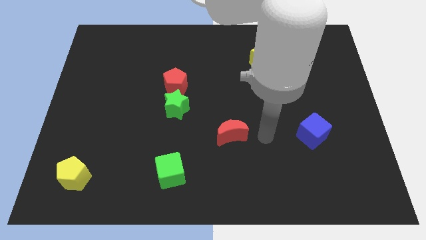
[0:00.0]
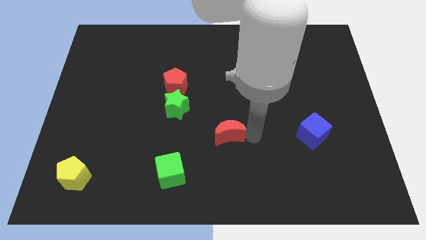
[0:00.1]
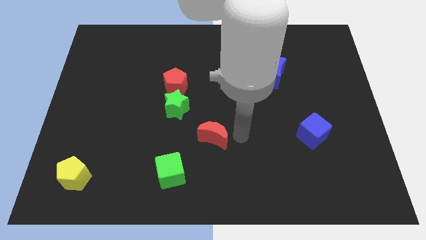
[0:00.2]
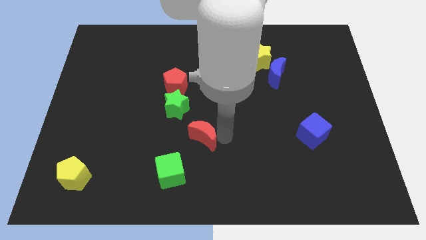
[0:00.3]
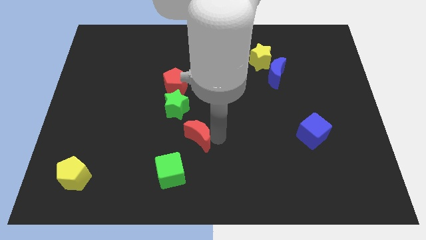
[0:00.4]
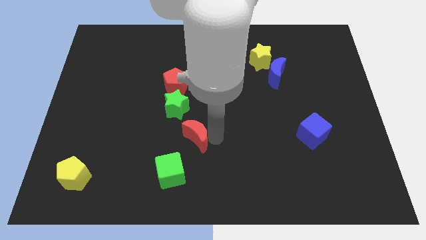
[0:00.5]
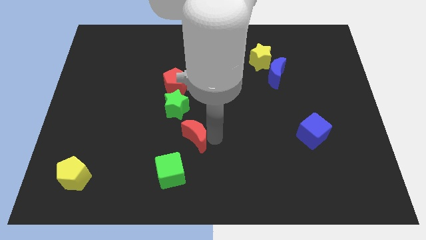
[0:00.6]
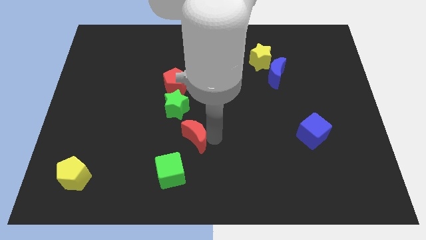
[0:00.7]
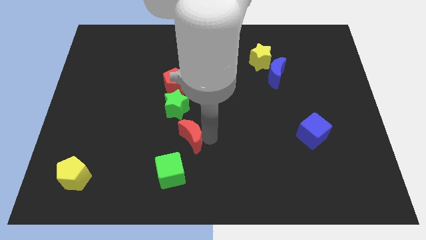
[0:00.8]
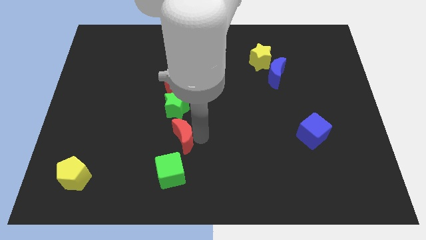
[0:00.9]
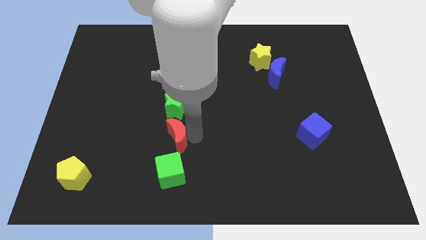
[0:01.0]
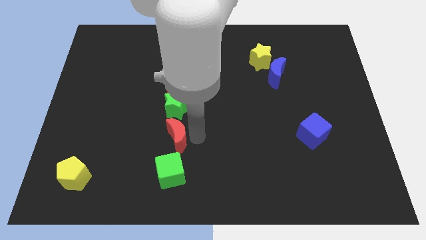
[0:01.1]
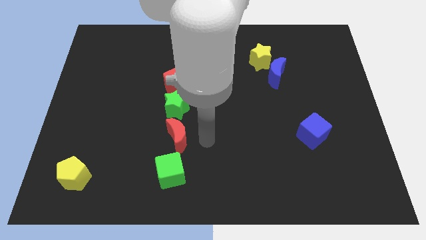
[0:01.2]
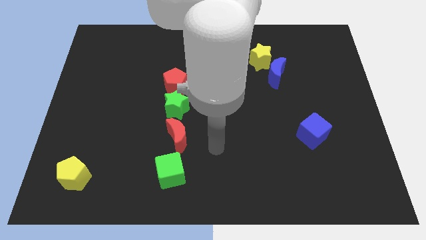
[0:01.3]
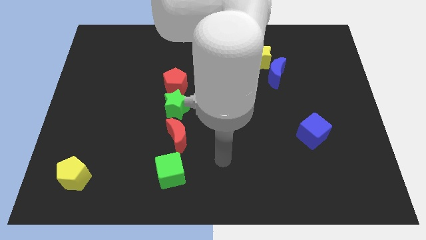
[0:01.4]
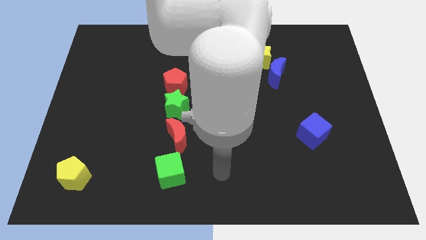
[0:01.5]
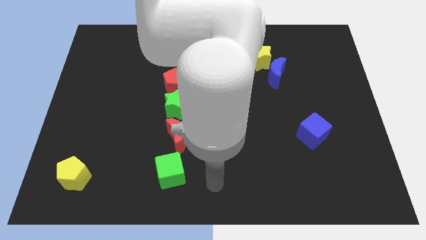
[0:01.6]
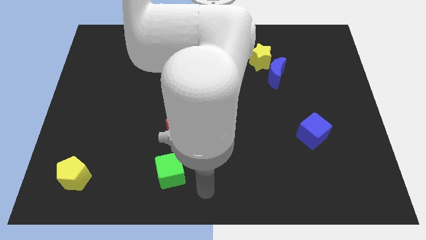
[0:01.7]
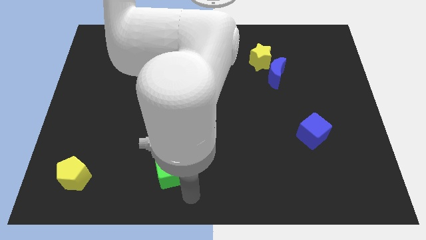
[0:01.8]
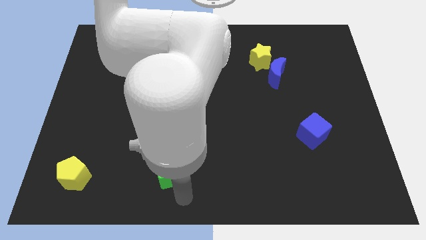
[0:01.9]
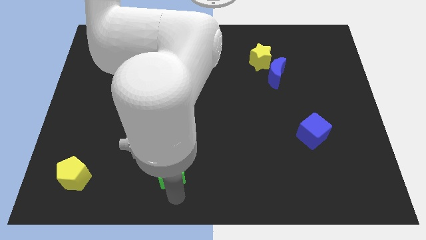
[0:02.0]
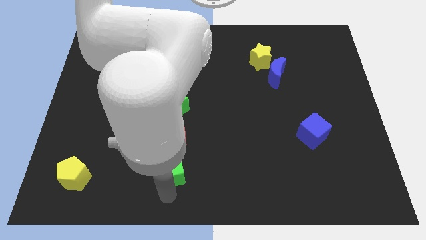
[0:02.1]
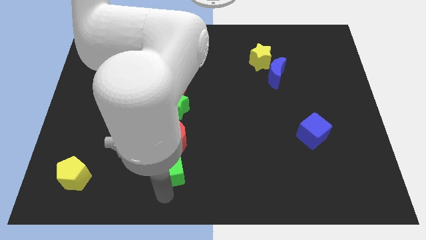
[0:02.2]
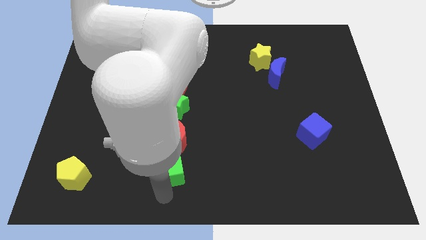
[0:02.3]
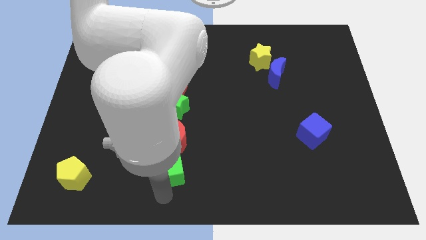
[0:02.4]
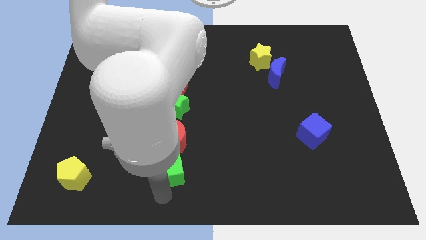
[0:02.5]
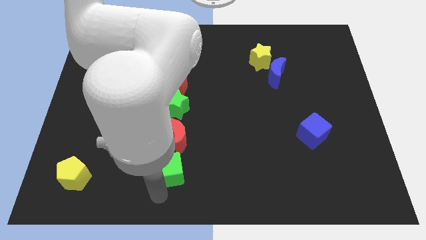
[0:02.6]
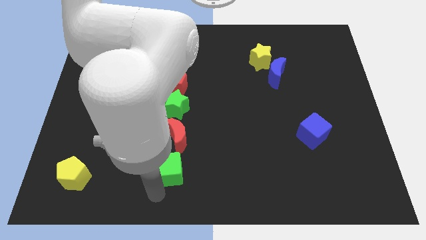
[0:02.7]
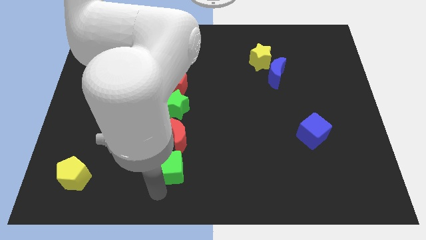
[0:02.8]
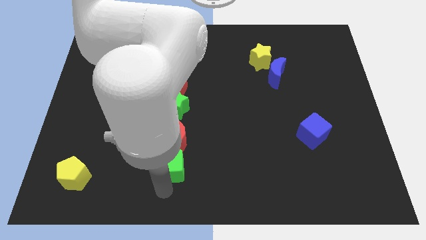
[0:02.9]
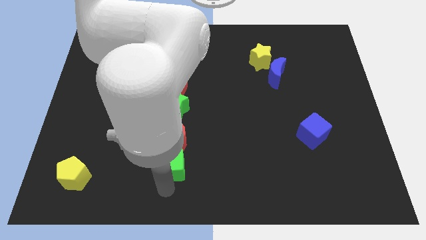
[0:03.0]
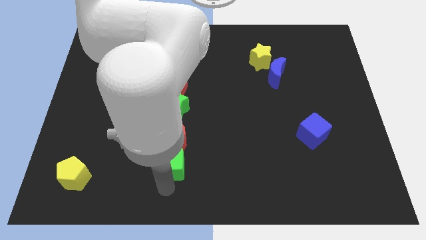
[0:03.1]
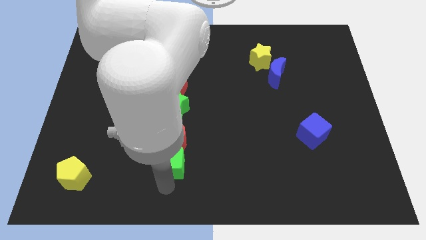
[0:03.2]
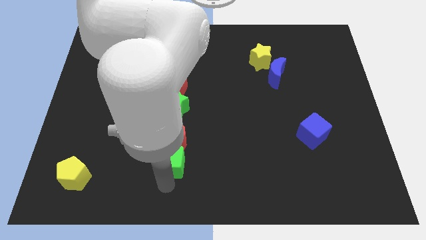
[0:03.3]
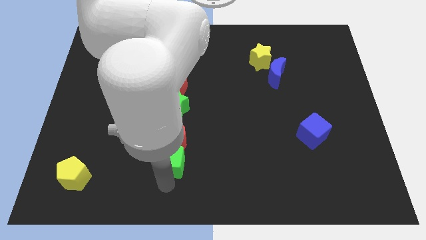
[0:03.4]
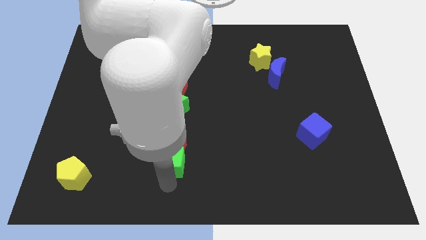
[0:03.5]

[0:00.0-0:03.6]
push the red moon at the bottom of the green star

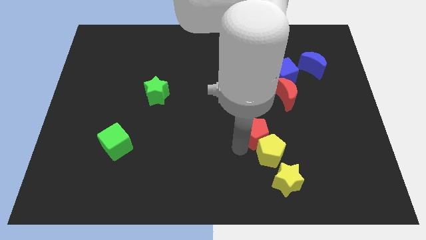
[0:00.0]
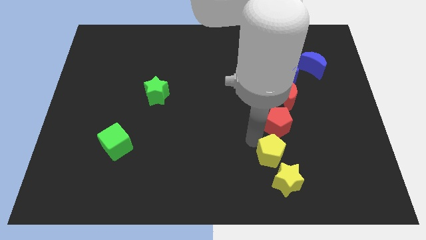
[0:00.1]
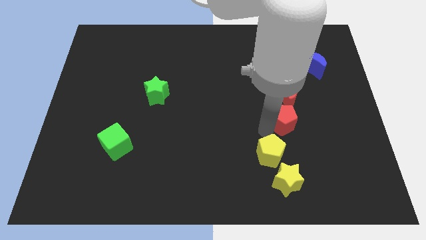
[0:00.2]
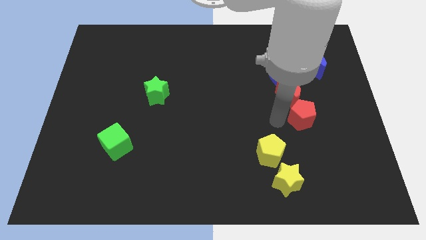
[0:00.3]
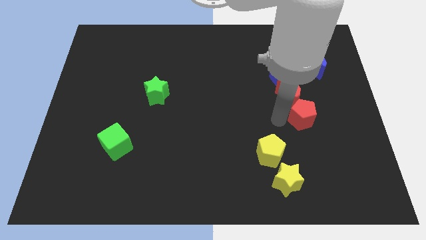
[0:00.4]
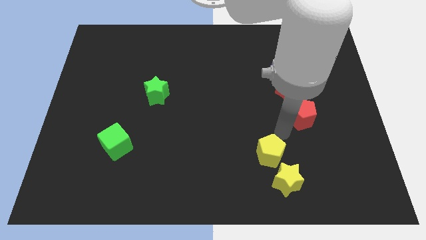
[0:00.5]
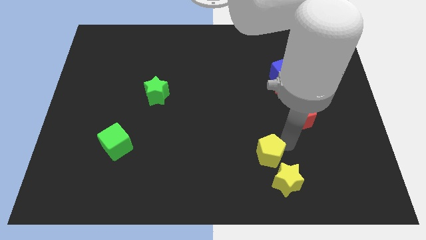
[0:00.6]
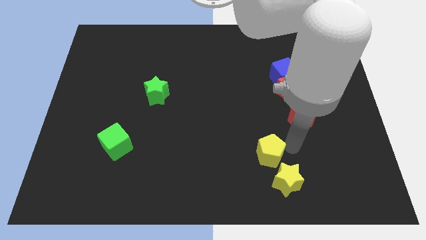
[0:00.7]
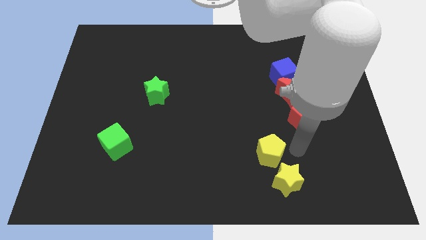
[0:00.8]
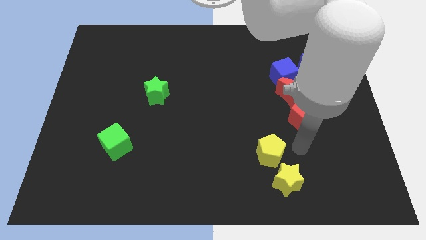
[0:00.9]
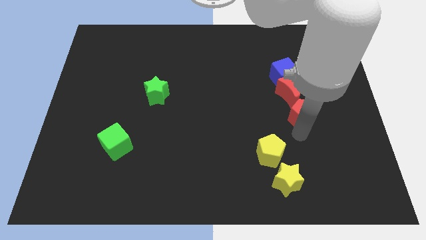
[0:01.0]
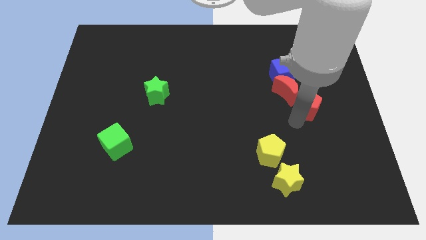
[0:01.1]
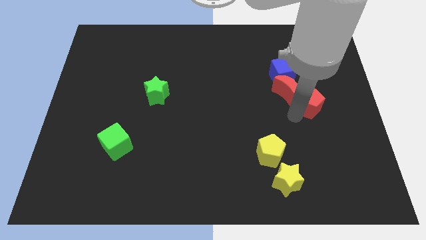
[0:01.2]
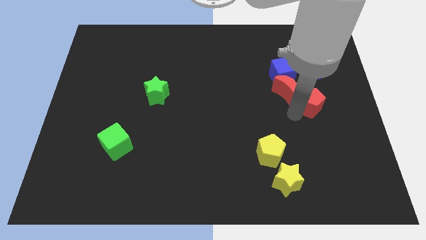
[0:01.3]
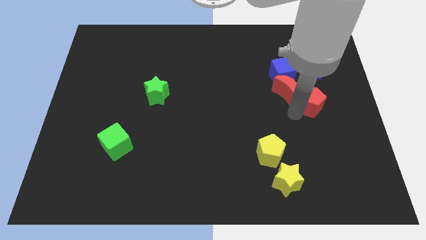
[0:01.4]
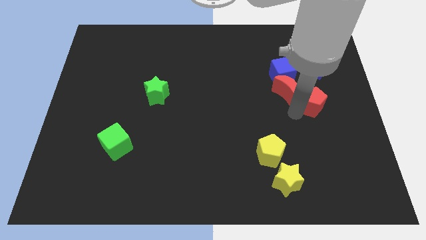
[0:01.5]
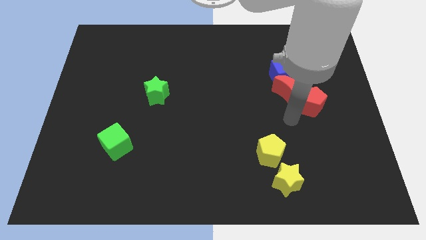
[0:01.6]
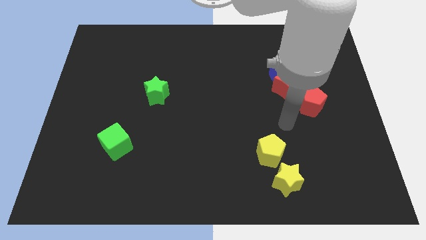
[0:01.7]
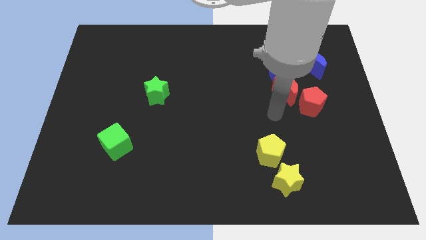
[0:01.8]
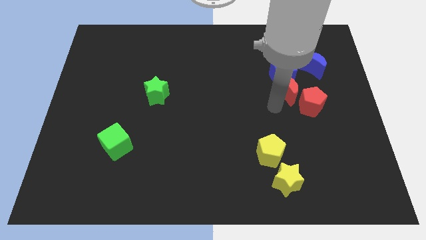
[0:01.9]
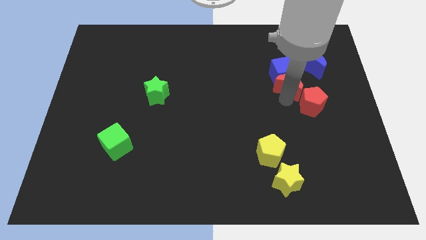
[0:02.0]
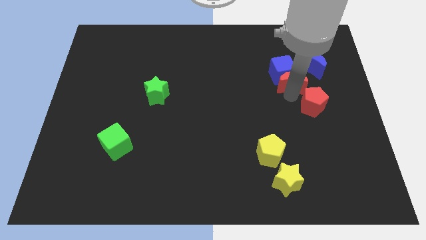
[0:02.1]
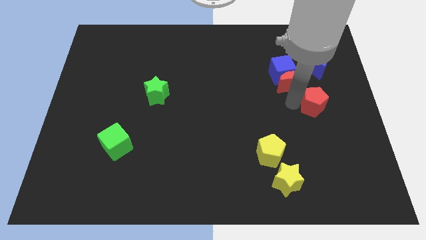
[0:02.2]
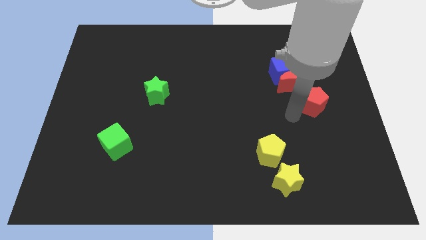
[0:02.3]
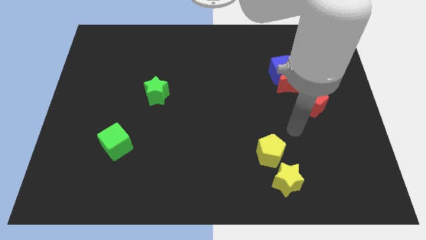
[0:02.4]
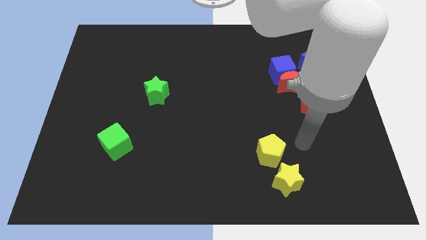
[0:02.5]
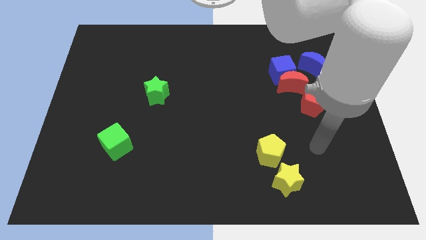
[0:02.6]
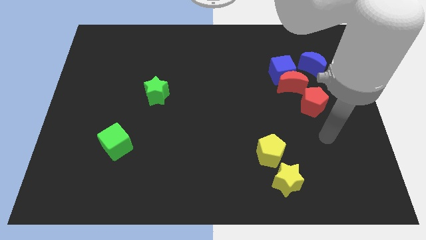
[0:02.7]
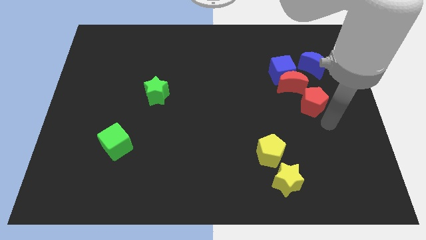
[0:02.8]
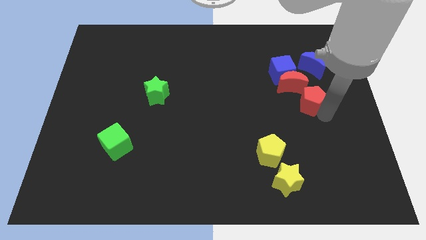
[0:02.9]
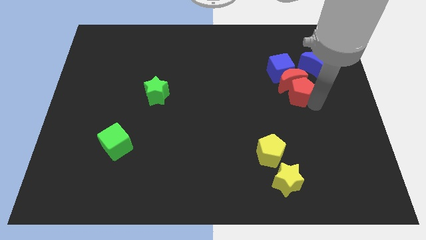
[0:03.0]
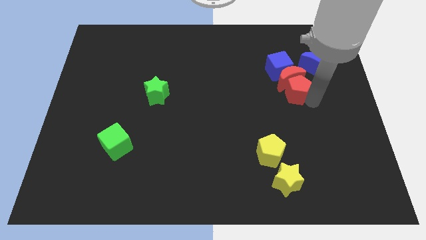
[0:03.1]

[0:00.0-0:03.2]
push the red pentagon into the bottom of the red crescent

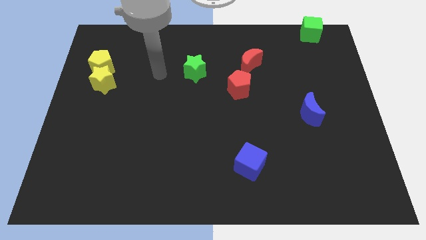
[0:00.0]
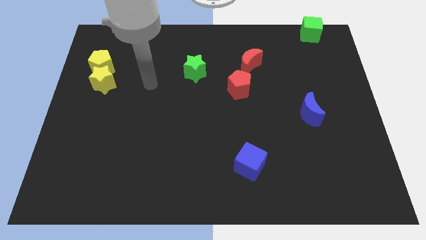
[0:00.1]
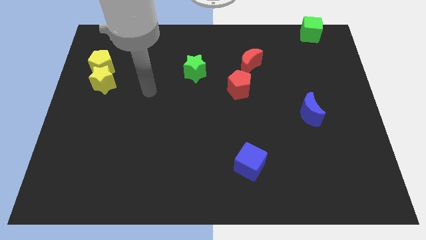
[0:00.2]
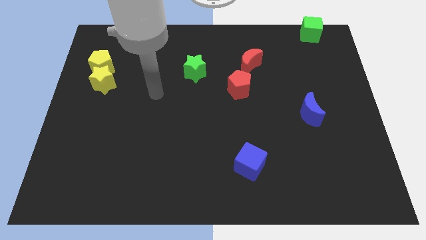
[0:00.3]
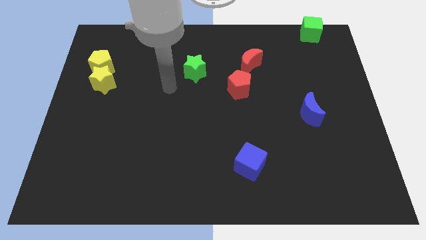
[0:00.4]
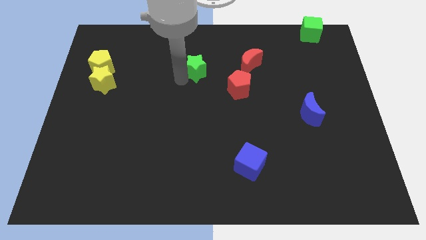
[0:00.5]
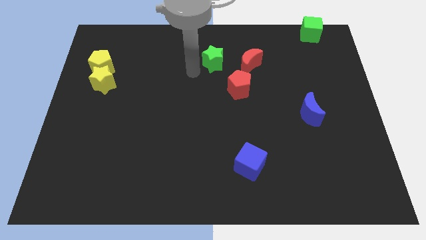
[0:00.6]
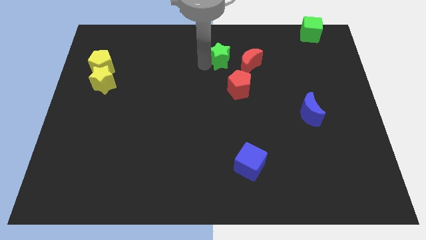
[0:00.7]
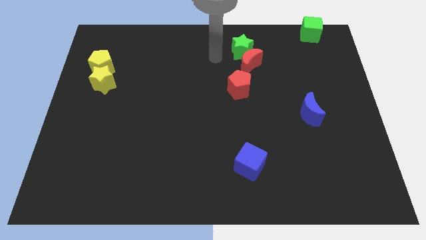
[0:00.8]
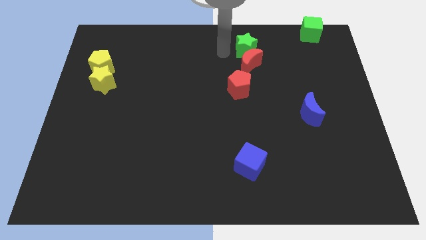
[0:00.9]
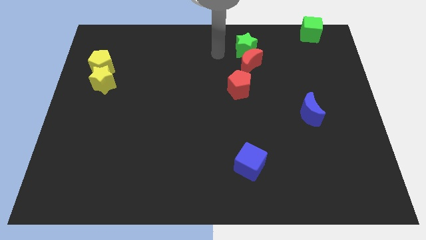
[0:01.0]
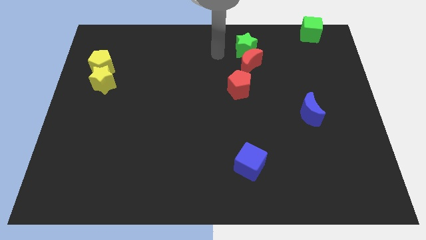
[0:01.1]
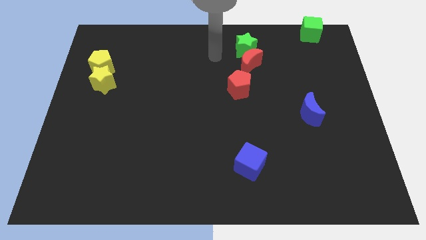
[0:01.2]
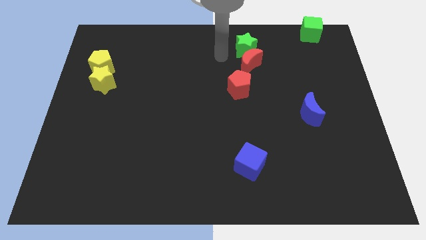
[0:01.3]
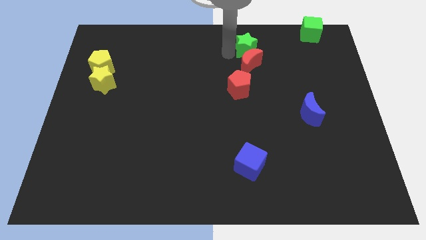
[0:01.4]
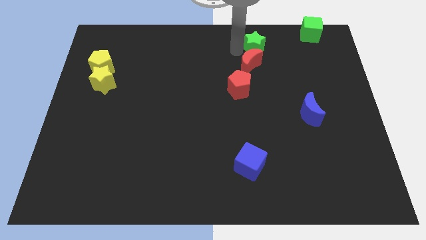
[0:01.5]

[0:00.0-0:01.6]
push the green star to the top of the red crescent

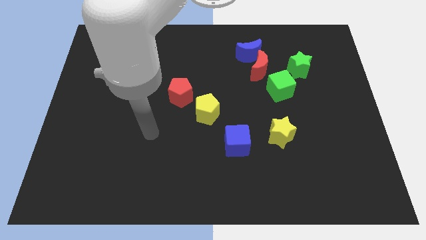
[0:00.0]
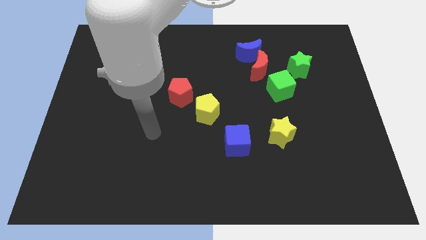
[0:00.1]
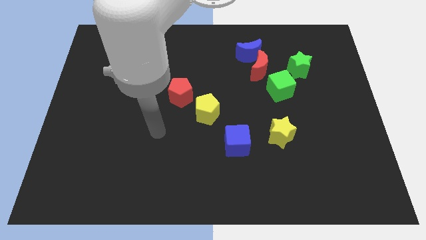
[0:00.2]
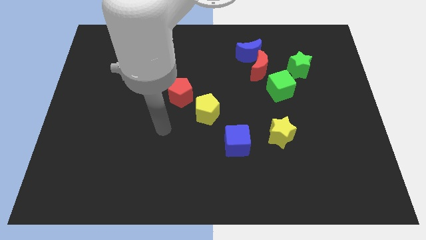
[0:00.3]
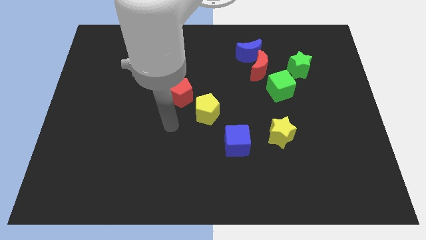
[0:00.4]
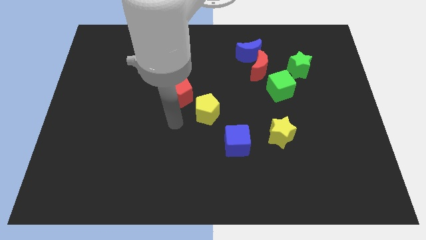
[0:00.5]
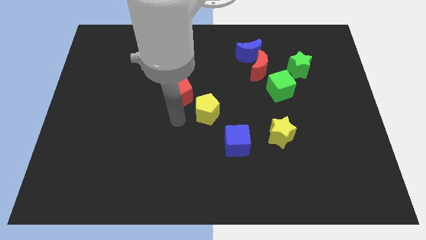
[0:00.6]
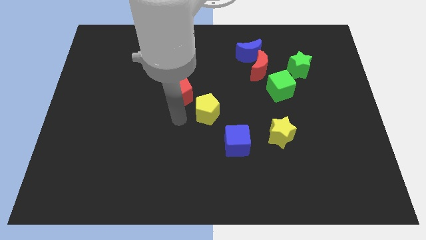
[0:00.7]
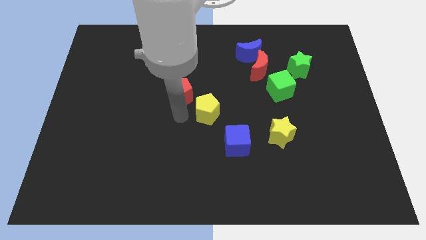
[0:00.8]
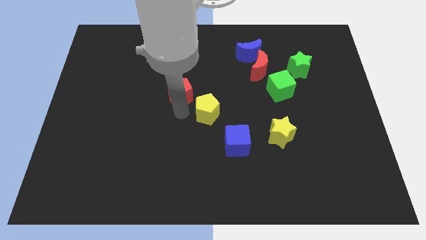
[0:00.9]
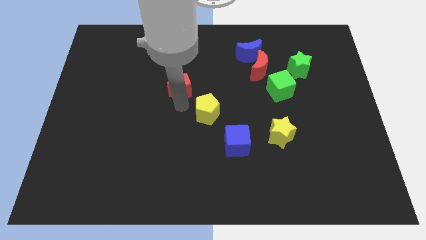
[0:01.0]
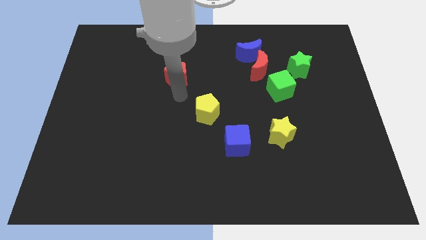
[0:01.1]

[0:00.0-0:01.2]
push the red pentagon slightly towards the top side of the board
